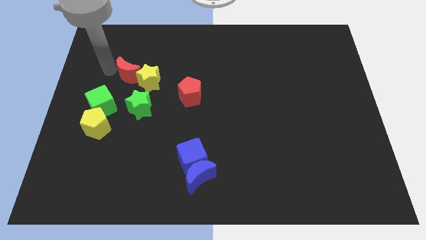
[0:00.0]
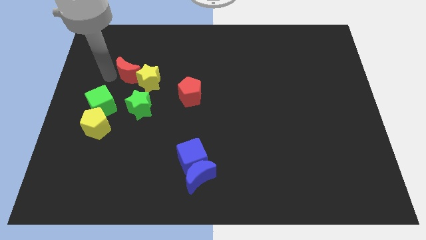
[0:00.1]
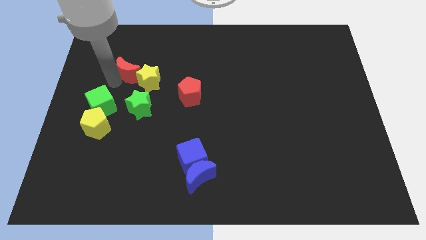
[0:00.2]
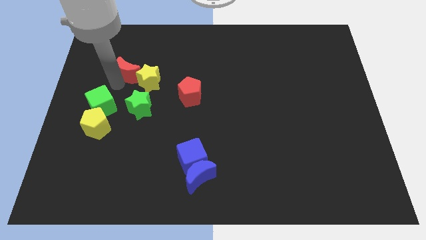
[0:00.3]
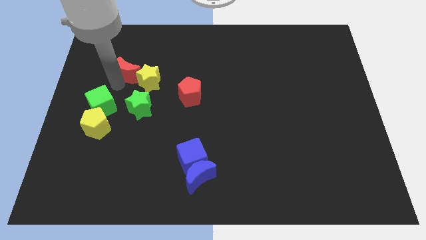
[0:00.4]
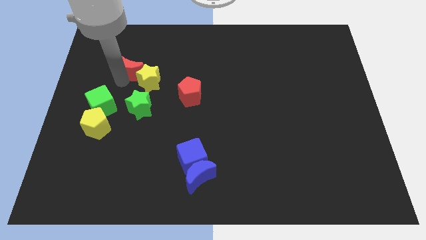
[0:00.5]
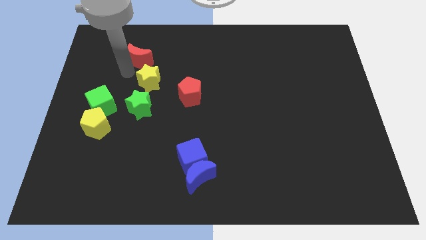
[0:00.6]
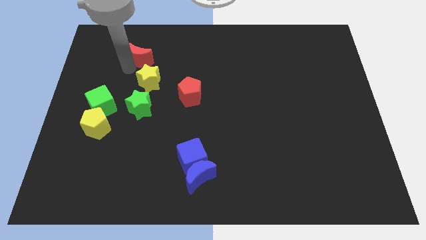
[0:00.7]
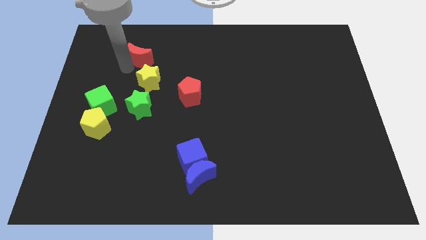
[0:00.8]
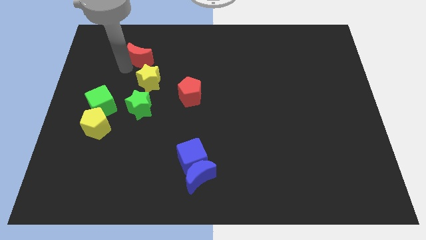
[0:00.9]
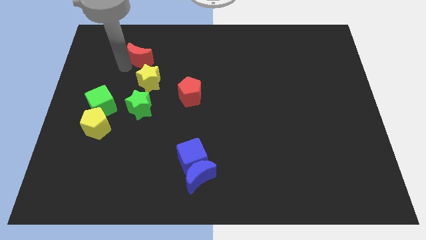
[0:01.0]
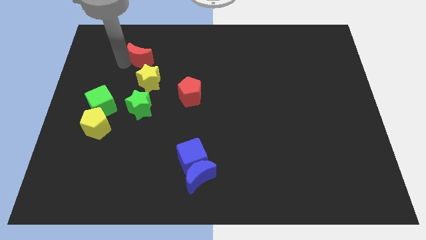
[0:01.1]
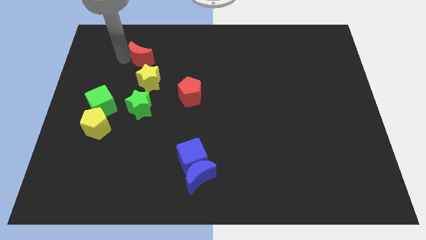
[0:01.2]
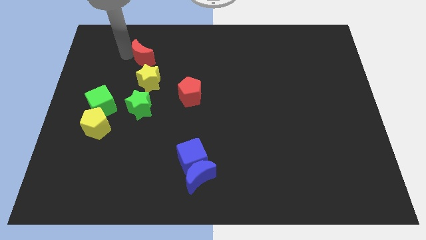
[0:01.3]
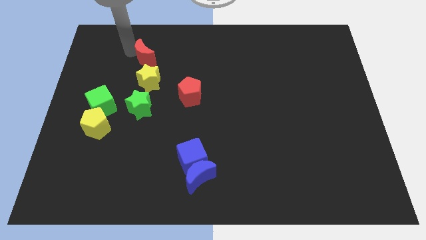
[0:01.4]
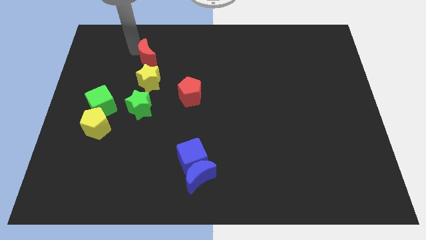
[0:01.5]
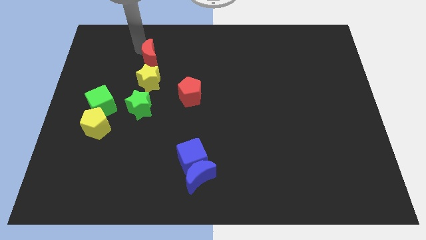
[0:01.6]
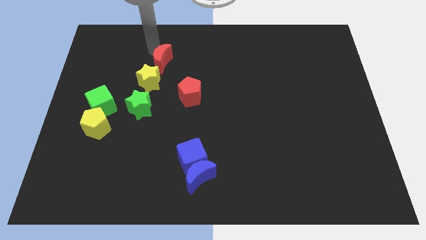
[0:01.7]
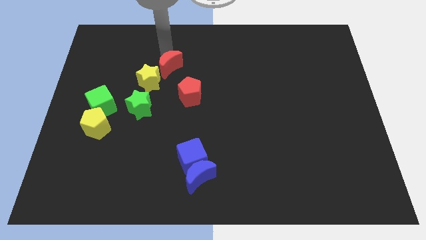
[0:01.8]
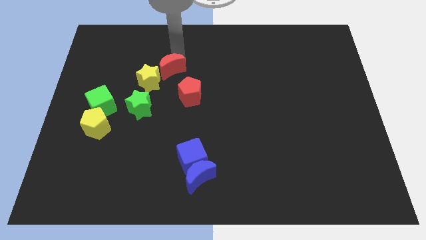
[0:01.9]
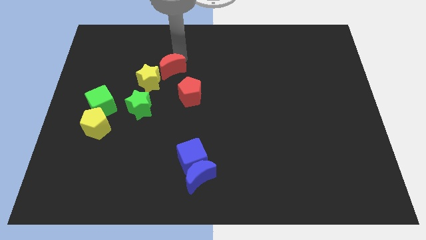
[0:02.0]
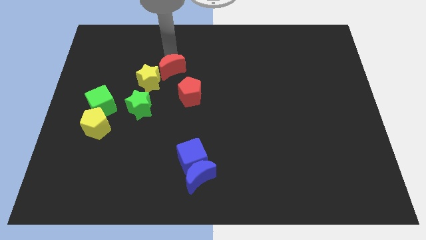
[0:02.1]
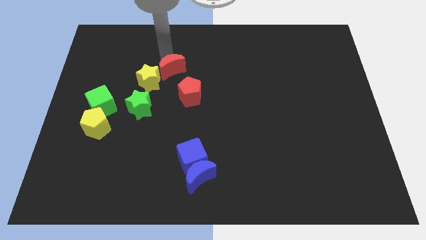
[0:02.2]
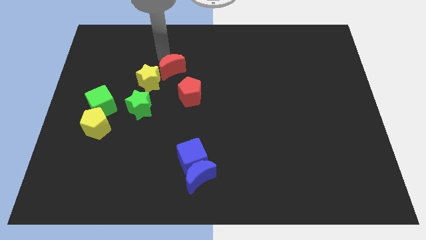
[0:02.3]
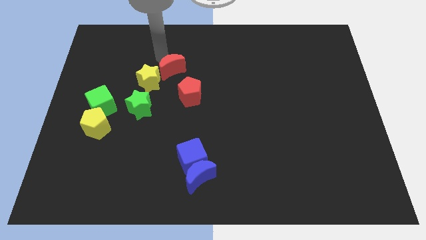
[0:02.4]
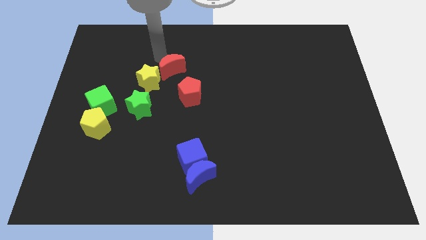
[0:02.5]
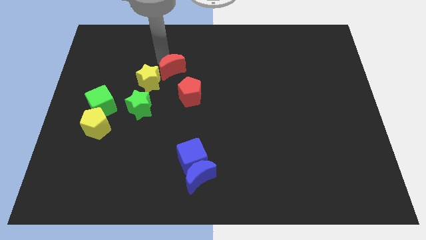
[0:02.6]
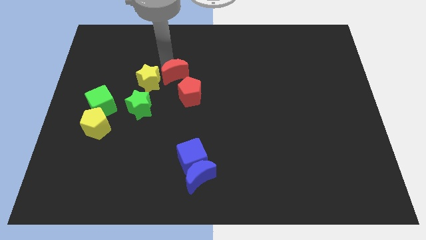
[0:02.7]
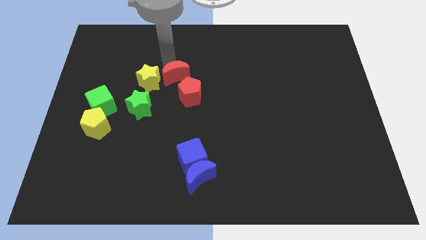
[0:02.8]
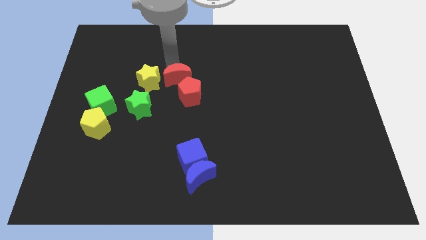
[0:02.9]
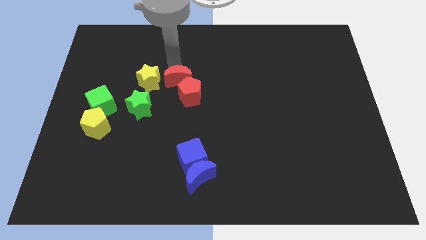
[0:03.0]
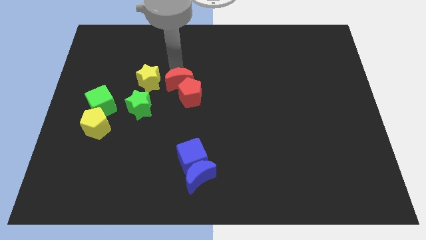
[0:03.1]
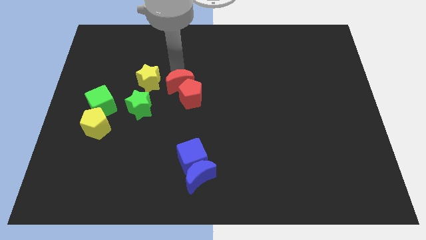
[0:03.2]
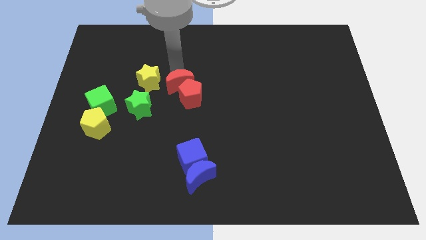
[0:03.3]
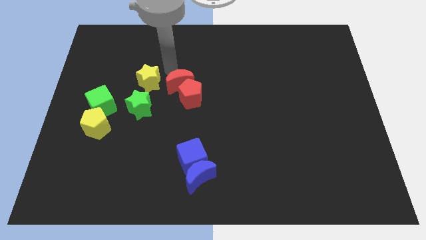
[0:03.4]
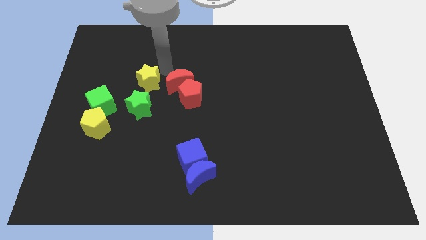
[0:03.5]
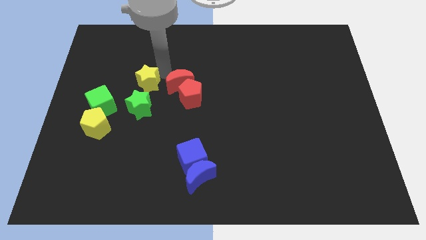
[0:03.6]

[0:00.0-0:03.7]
slide the red crescent into the red pentagon

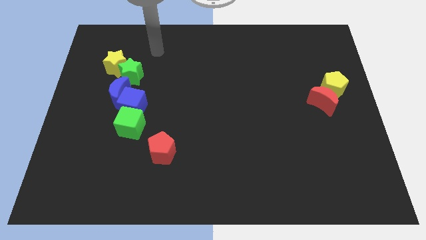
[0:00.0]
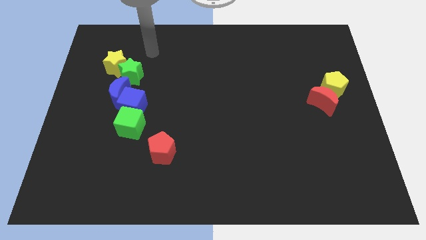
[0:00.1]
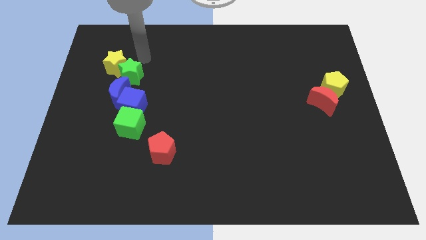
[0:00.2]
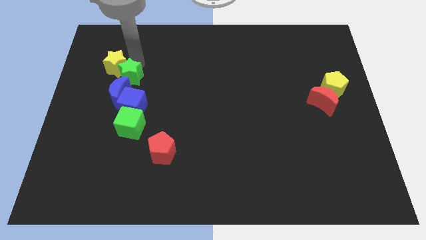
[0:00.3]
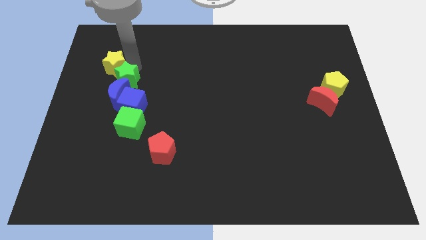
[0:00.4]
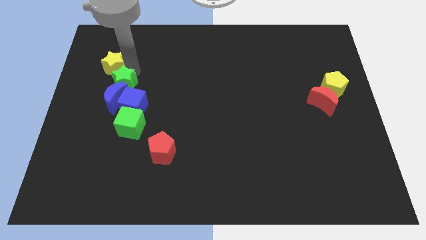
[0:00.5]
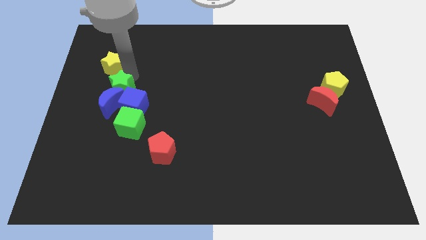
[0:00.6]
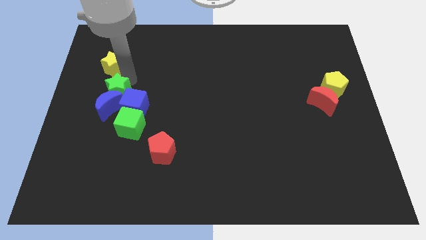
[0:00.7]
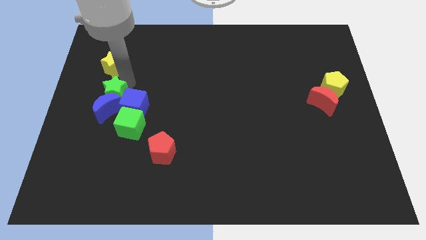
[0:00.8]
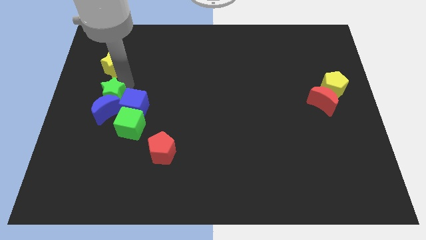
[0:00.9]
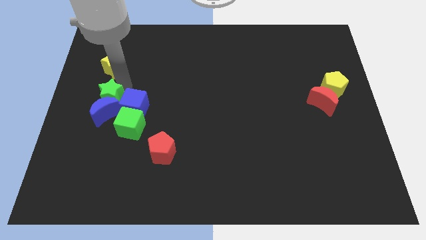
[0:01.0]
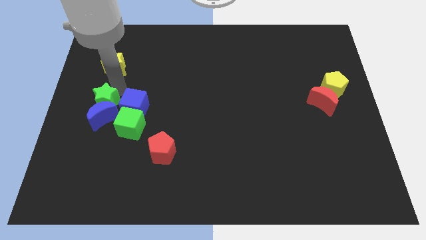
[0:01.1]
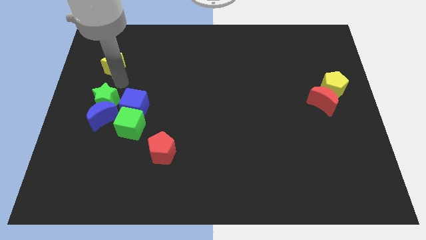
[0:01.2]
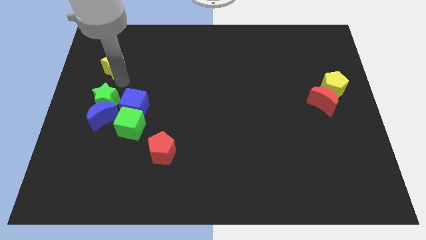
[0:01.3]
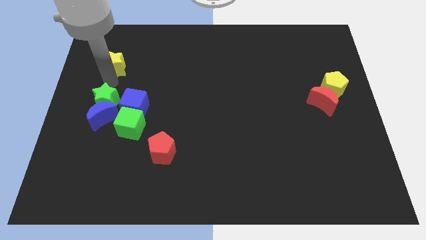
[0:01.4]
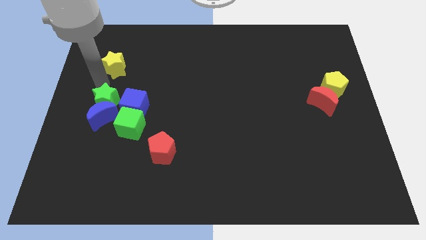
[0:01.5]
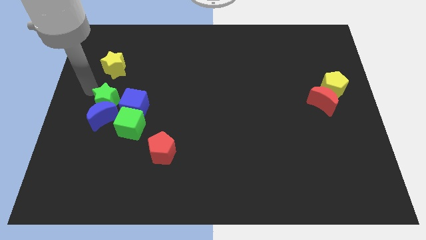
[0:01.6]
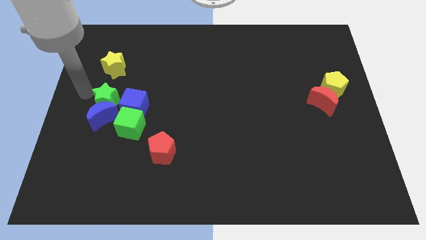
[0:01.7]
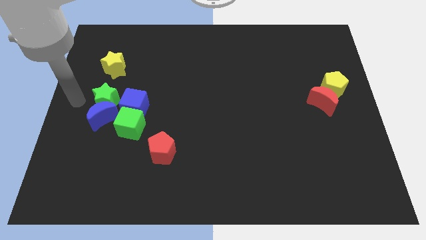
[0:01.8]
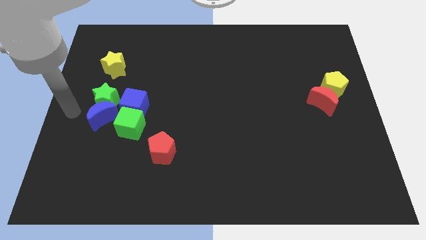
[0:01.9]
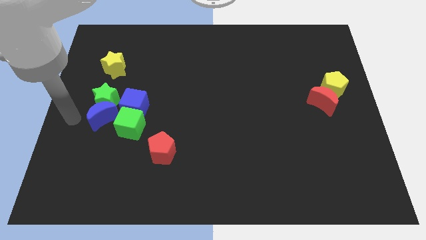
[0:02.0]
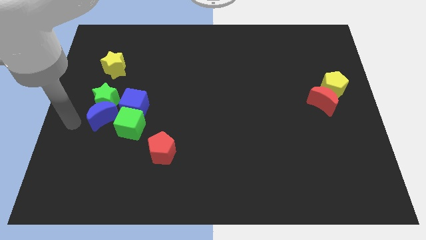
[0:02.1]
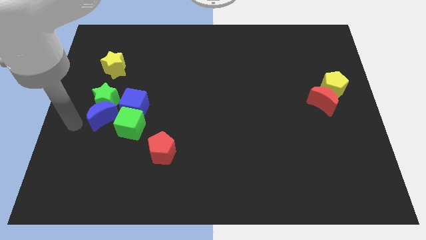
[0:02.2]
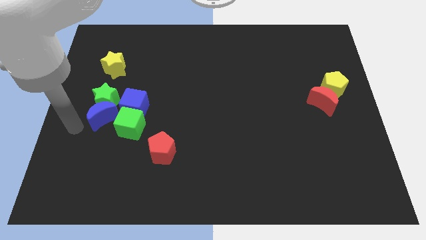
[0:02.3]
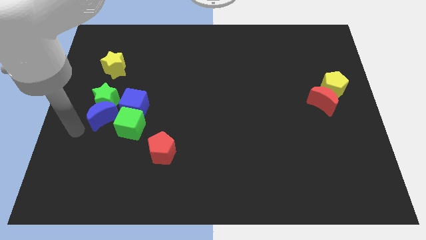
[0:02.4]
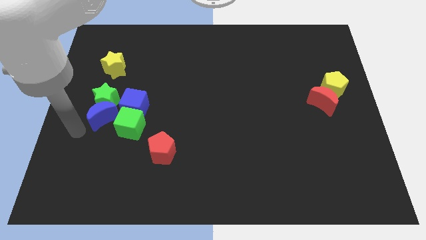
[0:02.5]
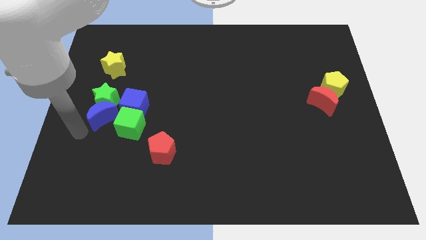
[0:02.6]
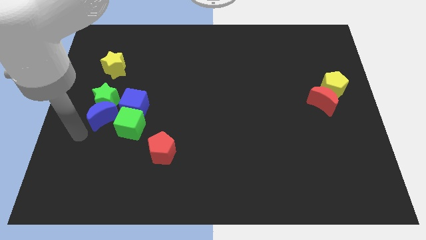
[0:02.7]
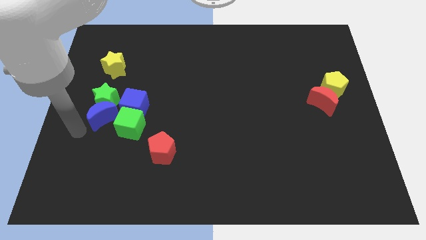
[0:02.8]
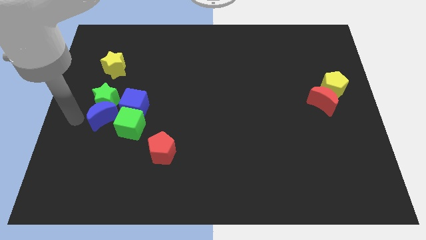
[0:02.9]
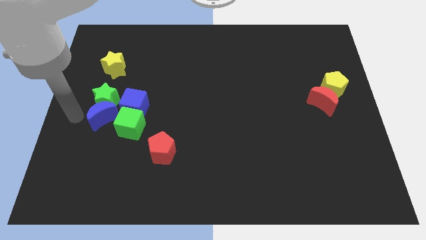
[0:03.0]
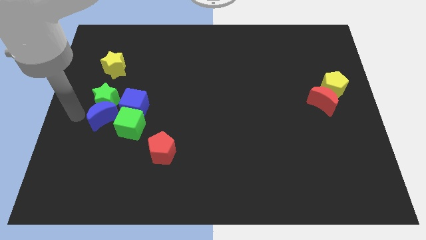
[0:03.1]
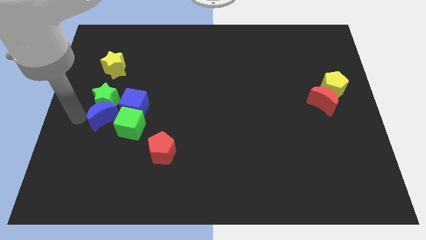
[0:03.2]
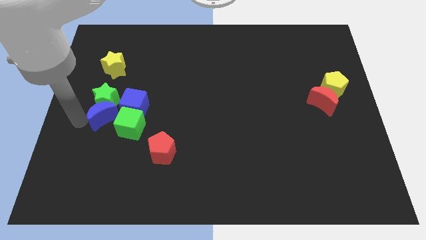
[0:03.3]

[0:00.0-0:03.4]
move green star and blue moon slightly down

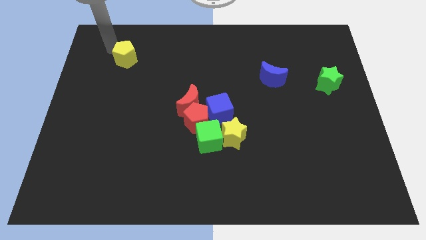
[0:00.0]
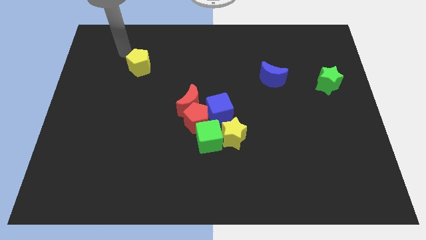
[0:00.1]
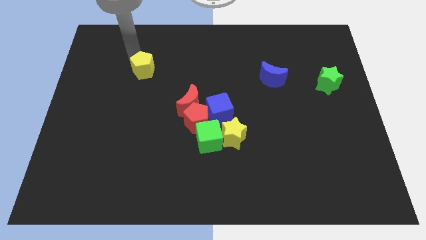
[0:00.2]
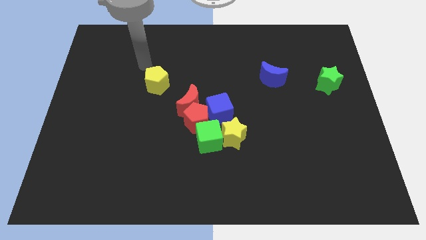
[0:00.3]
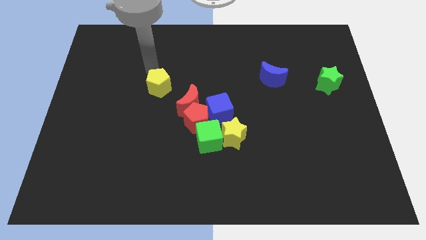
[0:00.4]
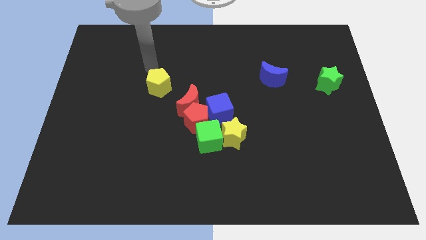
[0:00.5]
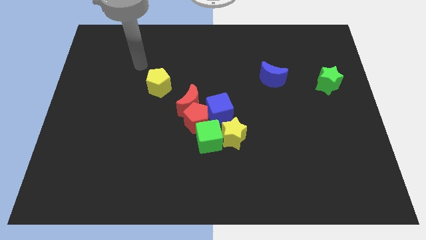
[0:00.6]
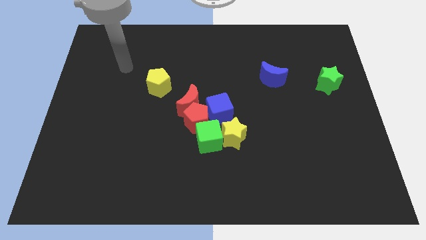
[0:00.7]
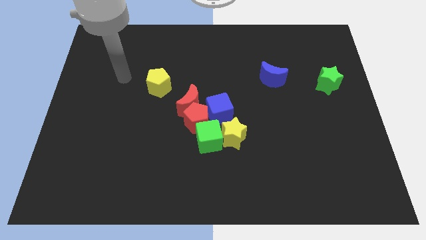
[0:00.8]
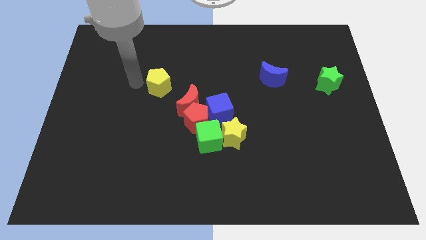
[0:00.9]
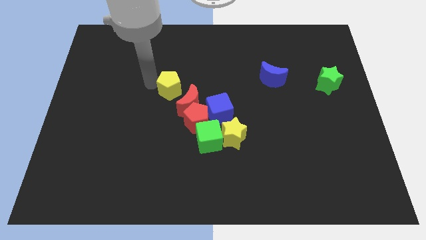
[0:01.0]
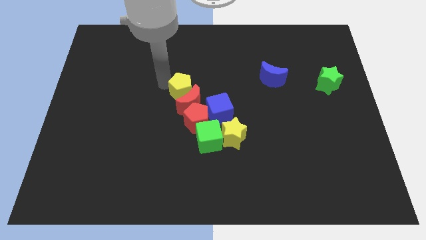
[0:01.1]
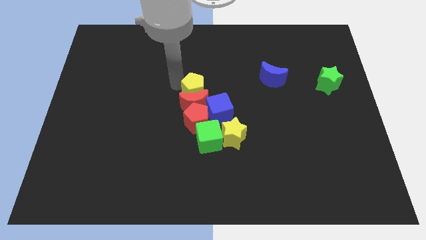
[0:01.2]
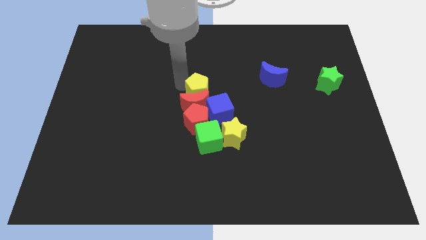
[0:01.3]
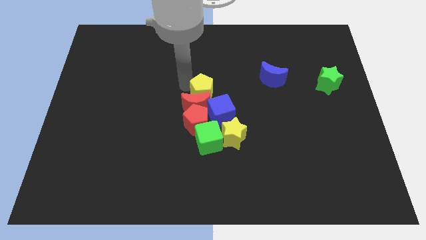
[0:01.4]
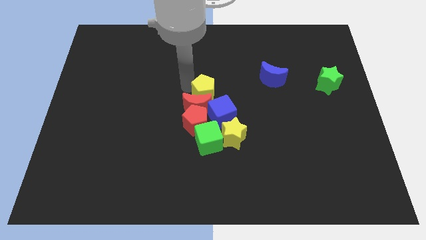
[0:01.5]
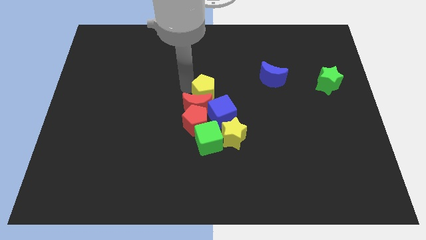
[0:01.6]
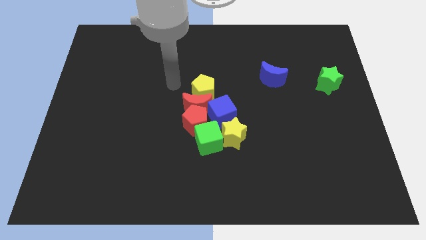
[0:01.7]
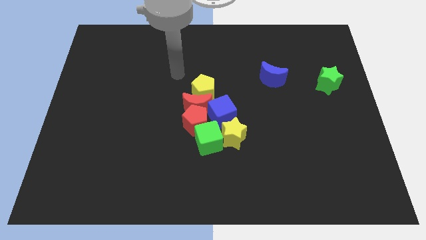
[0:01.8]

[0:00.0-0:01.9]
push the yellow pentagon into the red crescent
